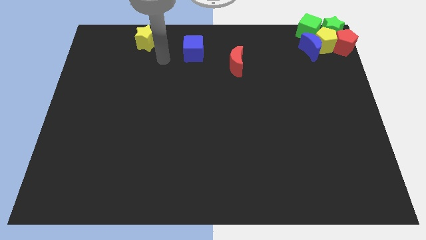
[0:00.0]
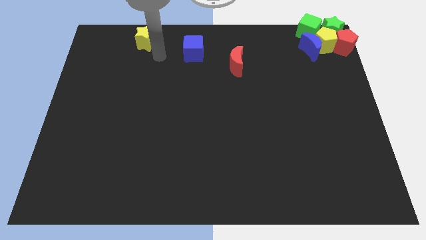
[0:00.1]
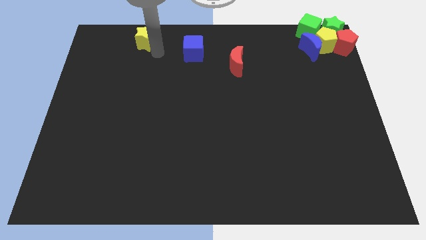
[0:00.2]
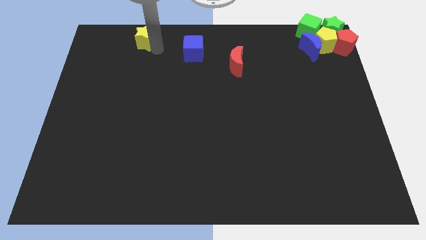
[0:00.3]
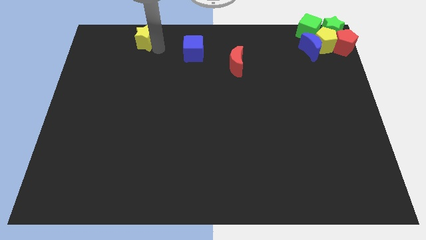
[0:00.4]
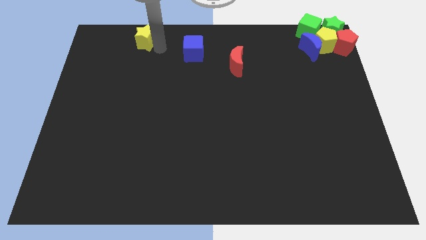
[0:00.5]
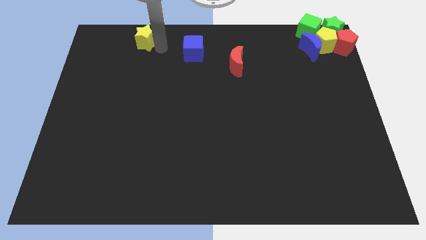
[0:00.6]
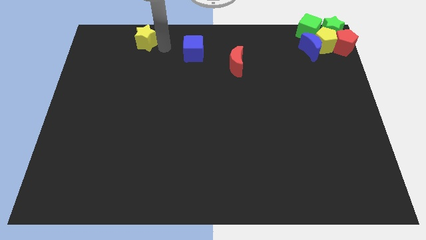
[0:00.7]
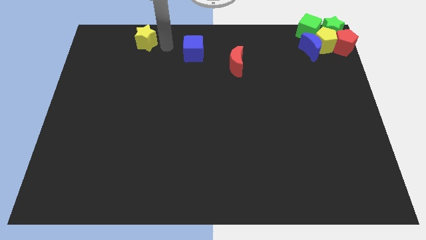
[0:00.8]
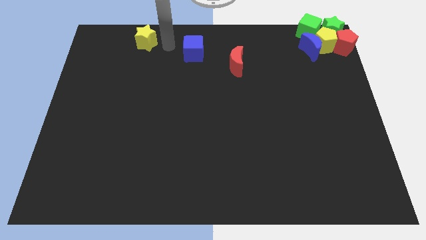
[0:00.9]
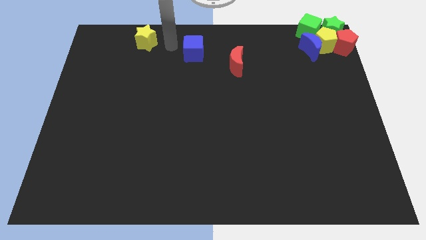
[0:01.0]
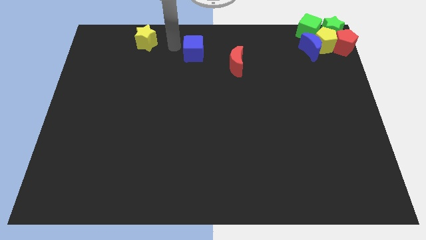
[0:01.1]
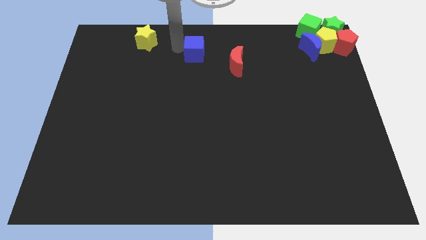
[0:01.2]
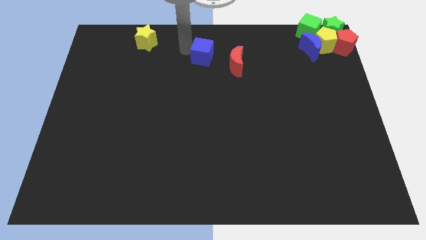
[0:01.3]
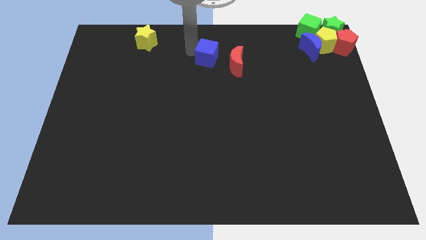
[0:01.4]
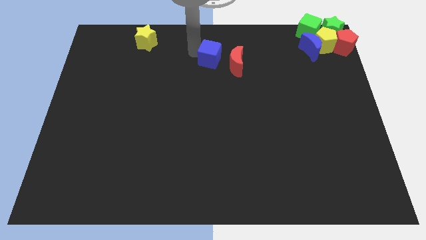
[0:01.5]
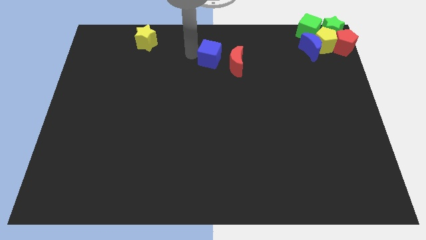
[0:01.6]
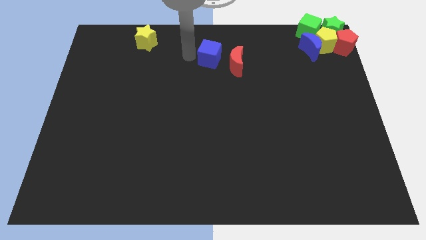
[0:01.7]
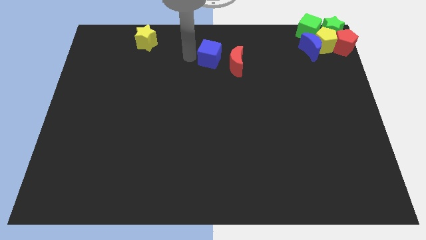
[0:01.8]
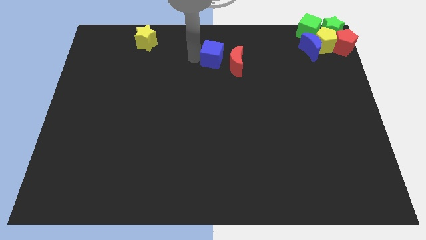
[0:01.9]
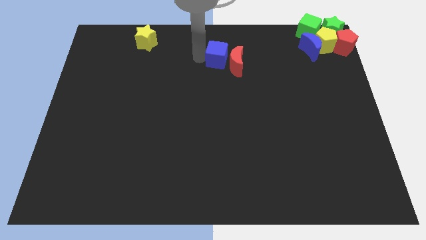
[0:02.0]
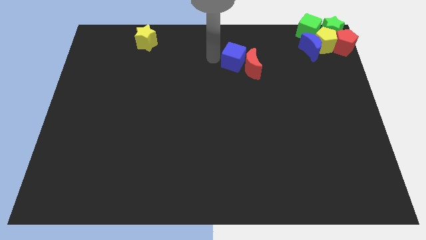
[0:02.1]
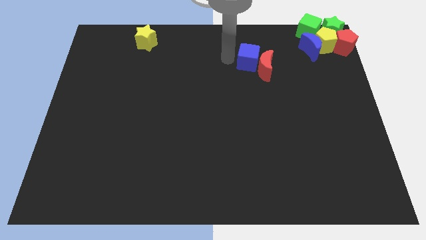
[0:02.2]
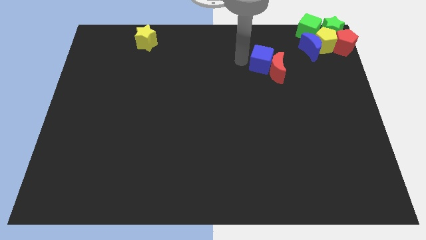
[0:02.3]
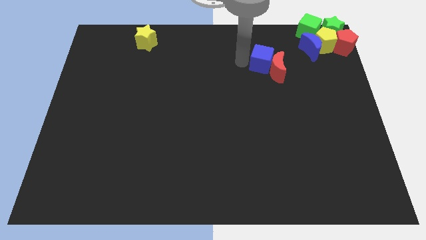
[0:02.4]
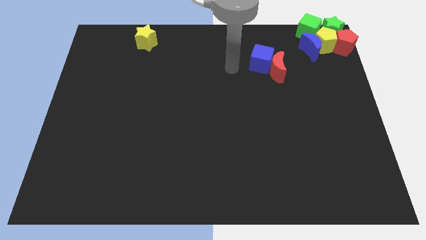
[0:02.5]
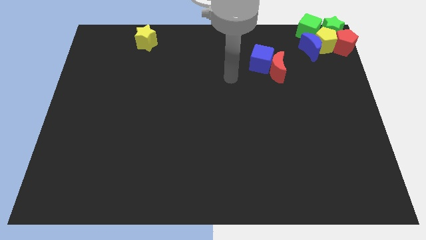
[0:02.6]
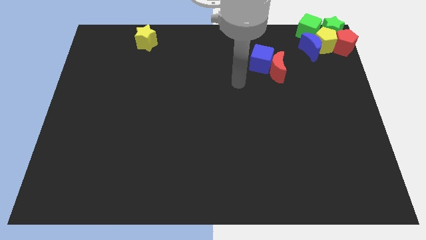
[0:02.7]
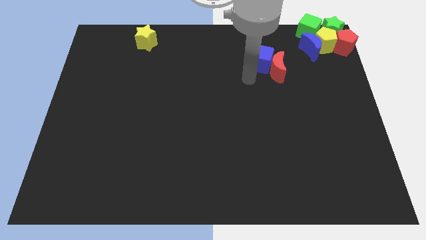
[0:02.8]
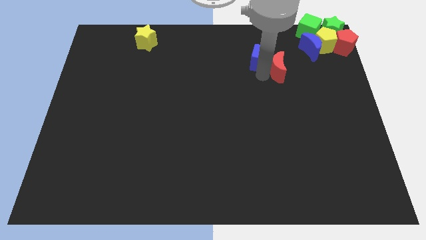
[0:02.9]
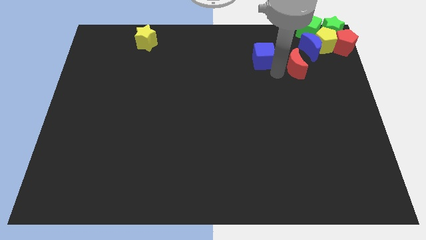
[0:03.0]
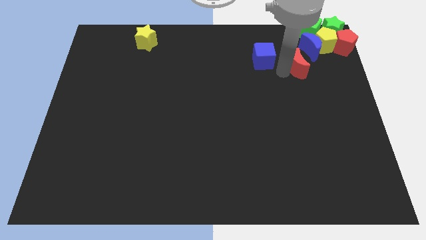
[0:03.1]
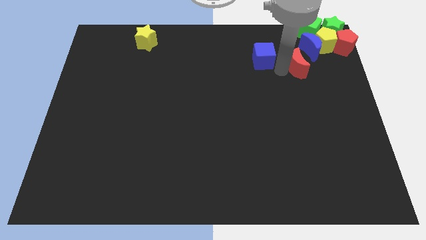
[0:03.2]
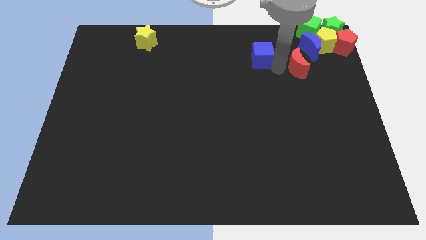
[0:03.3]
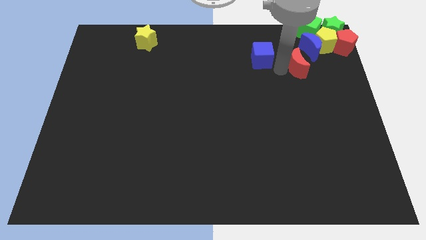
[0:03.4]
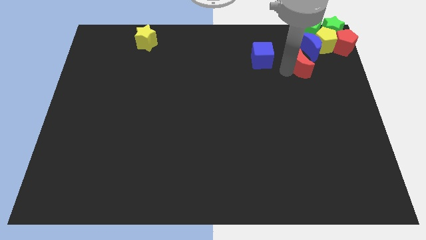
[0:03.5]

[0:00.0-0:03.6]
push the blue cube into the red moon

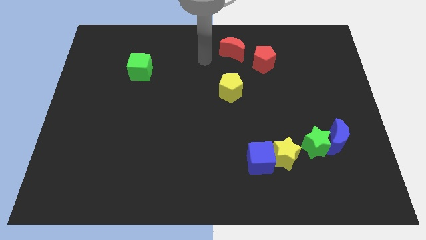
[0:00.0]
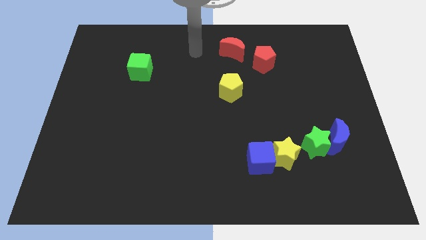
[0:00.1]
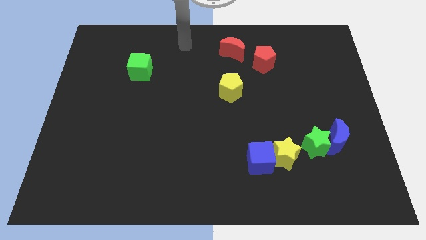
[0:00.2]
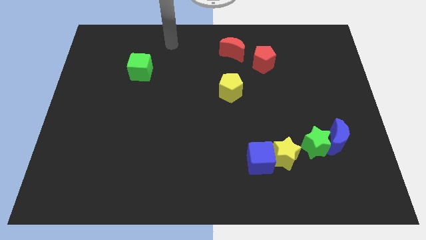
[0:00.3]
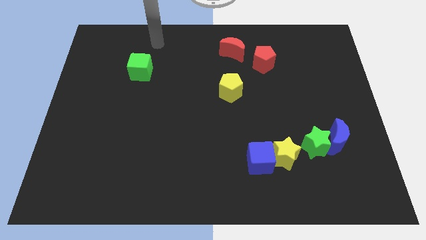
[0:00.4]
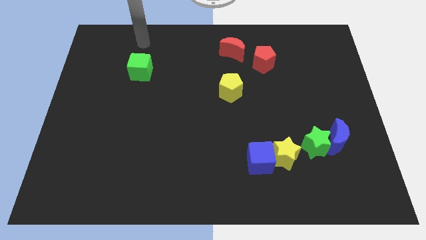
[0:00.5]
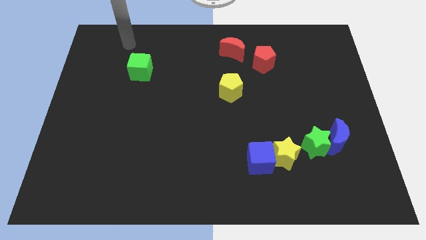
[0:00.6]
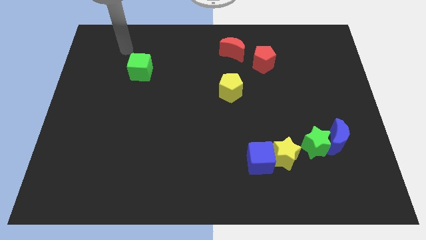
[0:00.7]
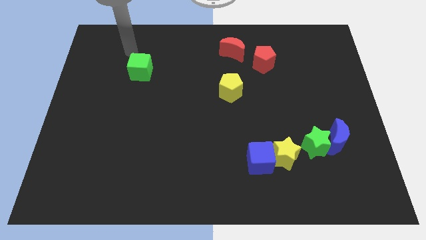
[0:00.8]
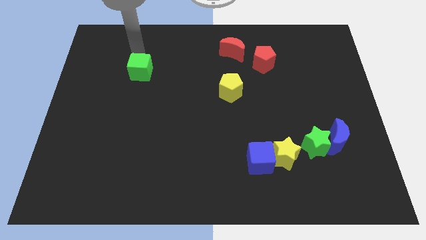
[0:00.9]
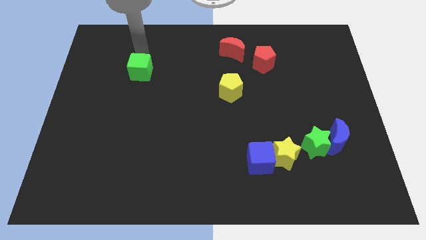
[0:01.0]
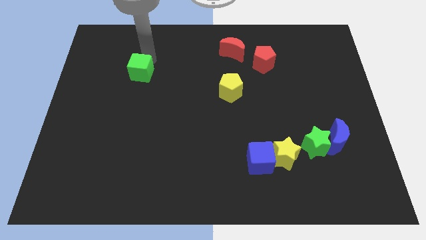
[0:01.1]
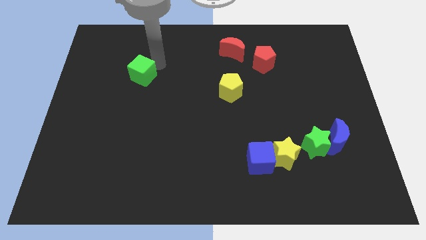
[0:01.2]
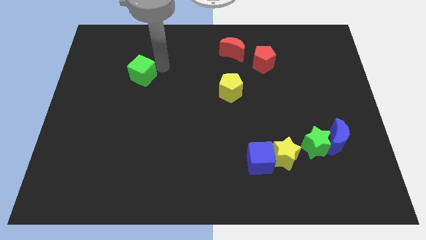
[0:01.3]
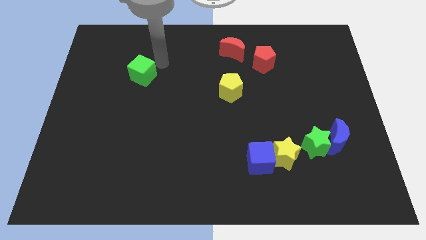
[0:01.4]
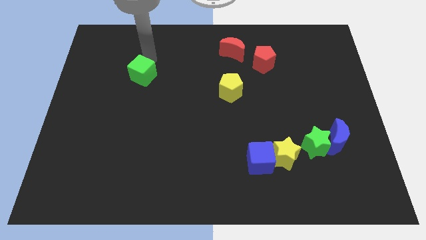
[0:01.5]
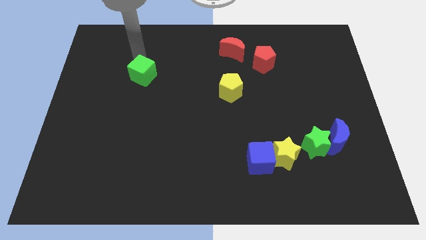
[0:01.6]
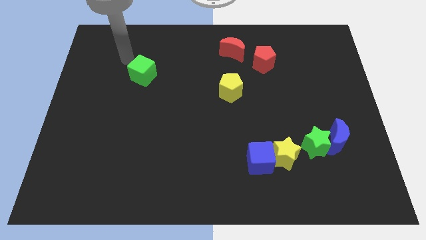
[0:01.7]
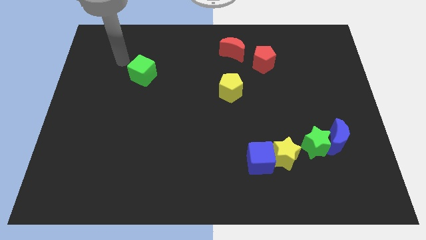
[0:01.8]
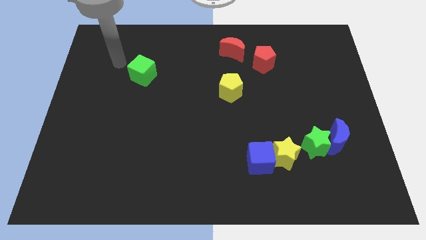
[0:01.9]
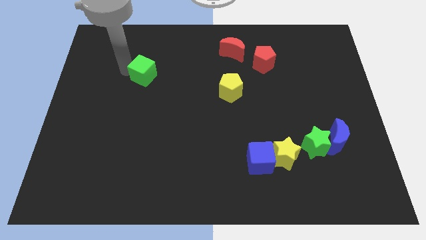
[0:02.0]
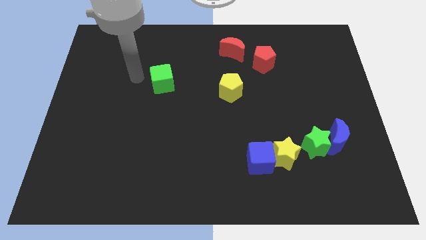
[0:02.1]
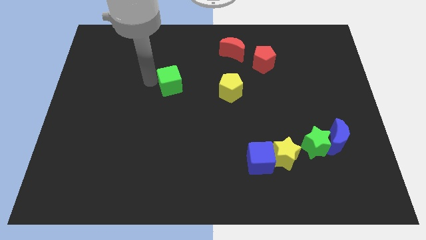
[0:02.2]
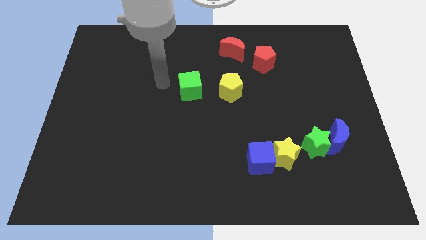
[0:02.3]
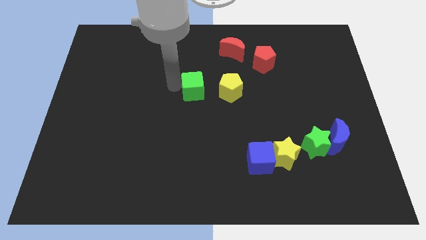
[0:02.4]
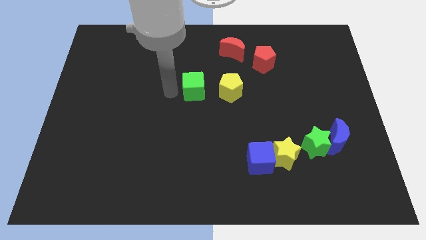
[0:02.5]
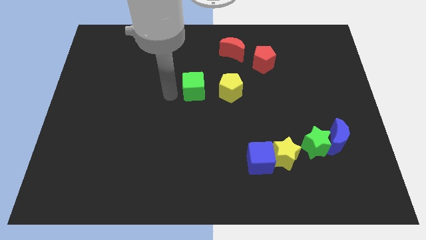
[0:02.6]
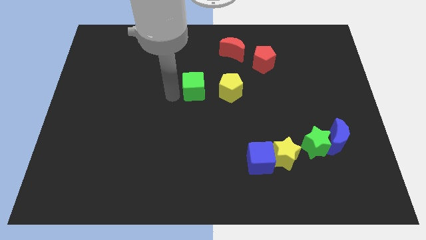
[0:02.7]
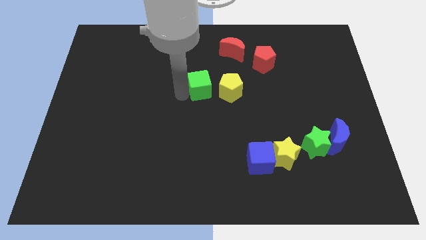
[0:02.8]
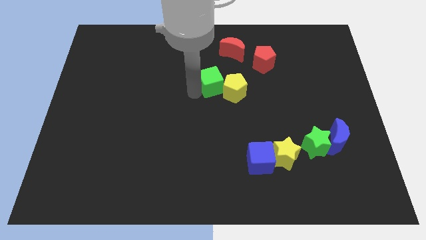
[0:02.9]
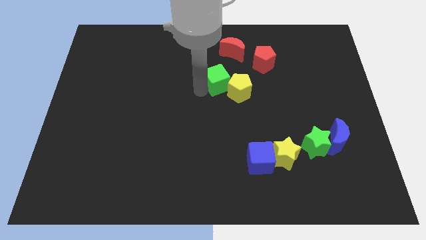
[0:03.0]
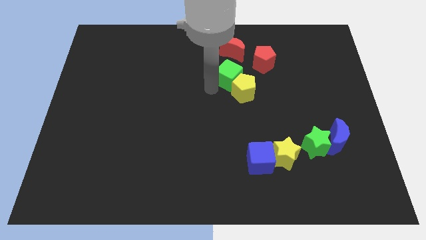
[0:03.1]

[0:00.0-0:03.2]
push the green cube into the yellow pentagon

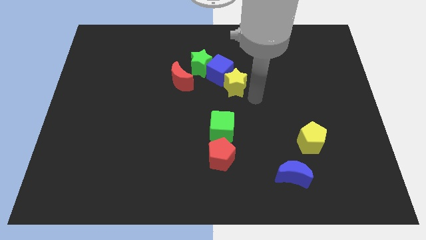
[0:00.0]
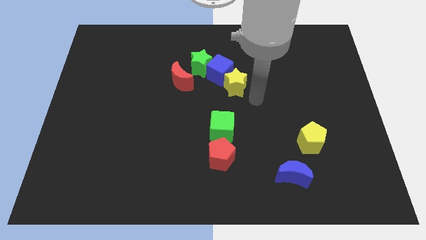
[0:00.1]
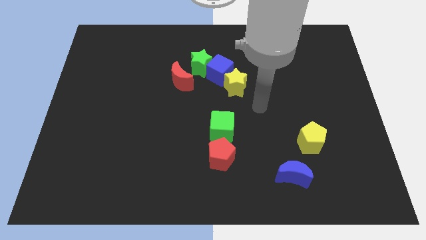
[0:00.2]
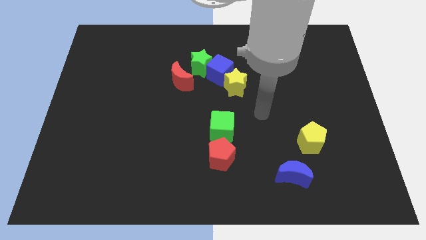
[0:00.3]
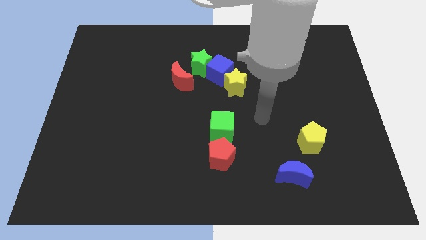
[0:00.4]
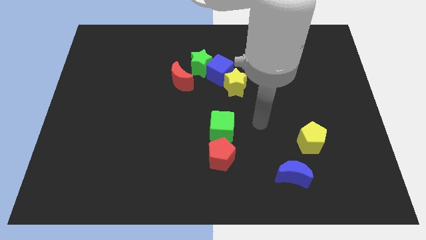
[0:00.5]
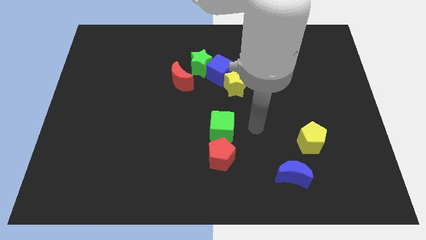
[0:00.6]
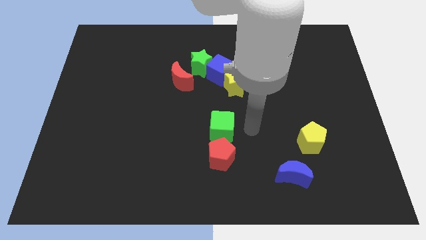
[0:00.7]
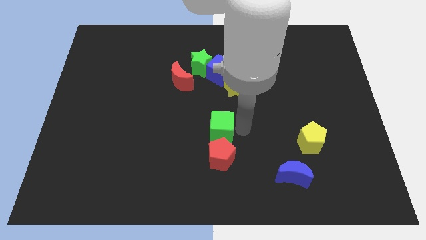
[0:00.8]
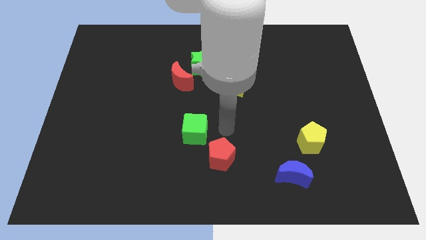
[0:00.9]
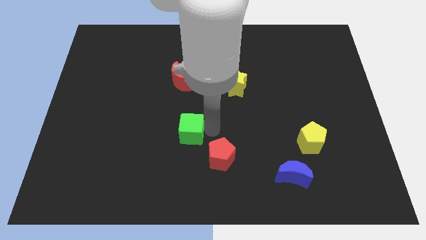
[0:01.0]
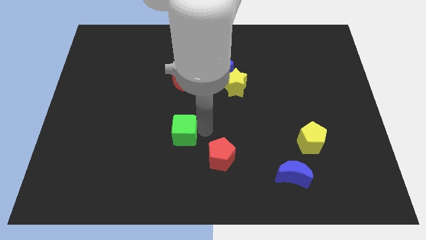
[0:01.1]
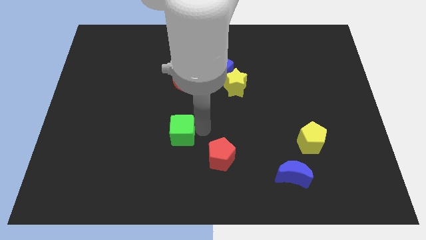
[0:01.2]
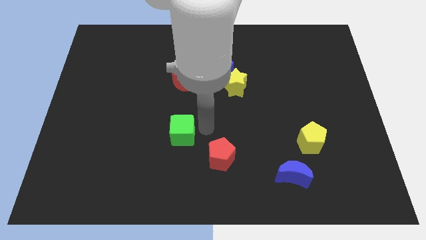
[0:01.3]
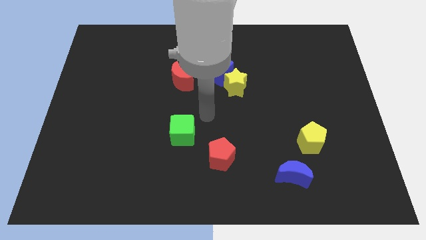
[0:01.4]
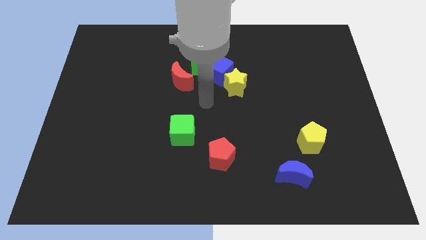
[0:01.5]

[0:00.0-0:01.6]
move the green cube slightly to the left

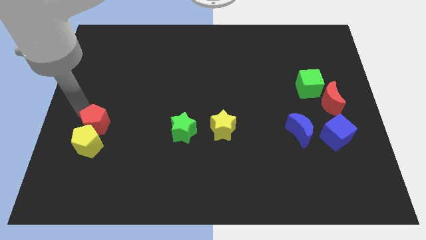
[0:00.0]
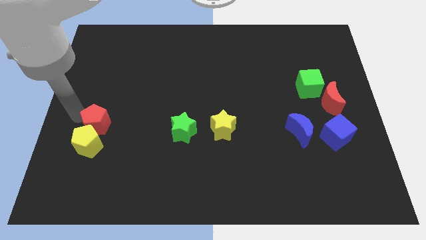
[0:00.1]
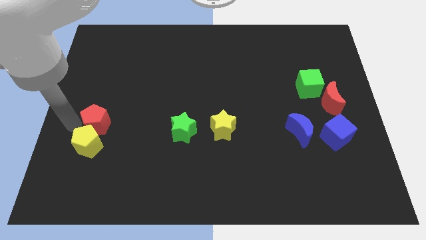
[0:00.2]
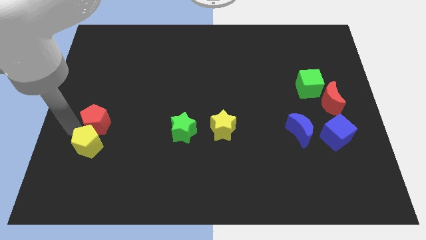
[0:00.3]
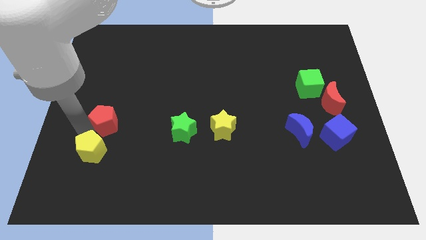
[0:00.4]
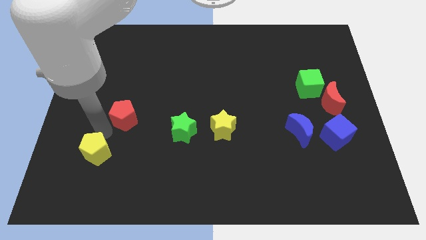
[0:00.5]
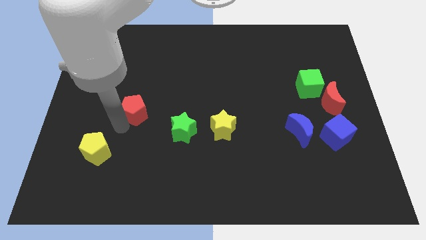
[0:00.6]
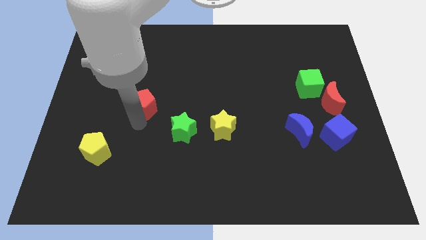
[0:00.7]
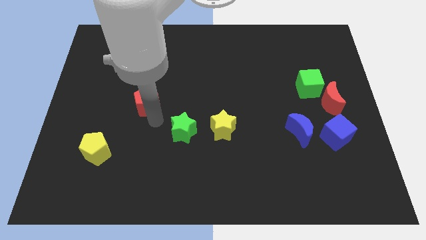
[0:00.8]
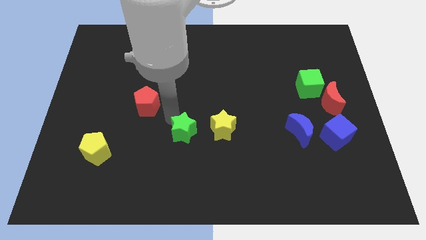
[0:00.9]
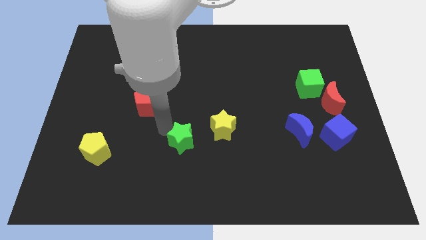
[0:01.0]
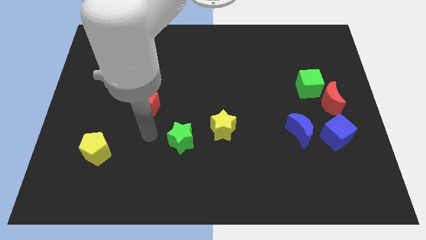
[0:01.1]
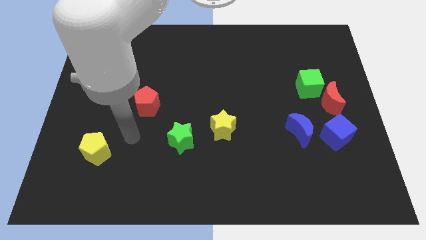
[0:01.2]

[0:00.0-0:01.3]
push the red pentagon away from the yellow pentagon
